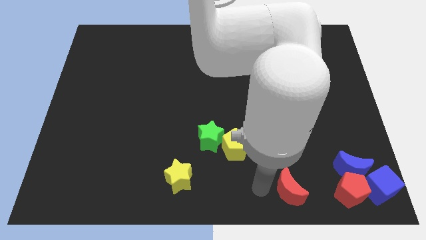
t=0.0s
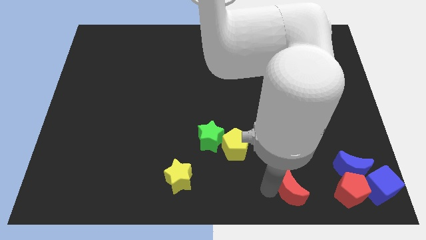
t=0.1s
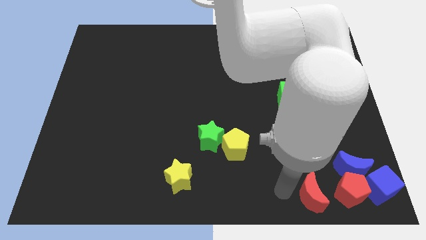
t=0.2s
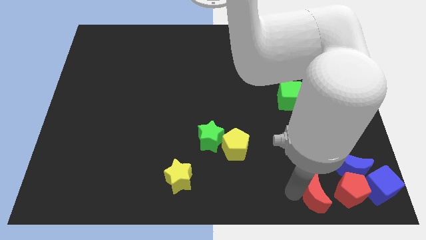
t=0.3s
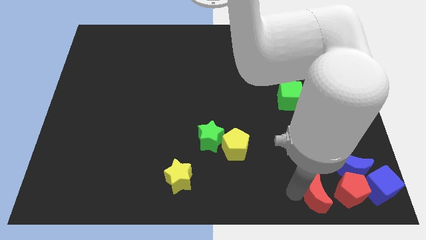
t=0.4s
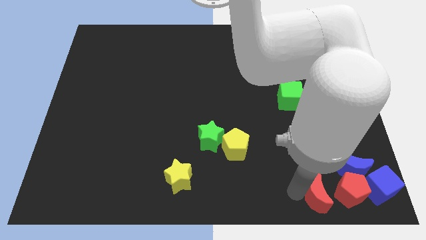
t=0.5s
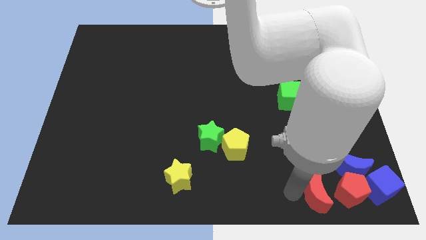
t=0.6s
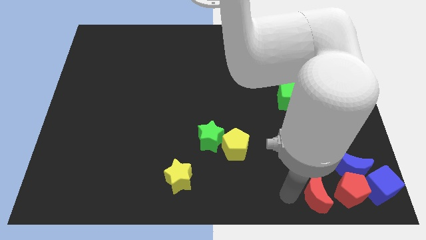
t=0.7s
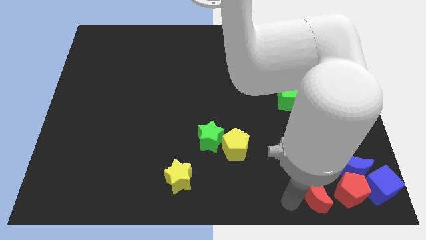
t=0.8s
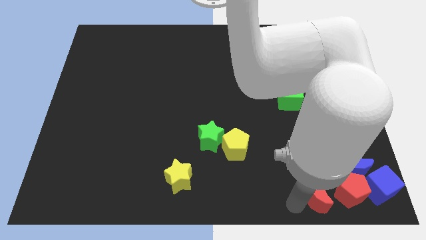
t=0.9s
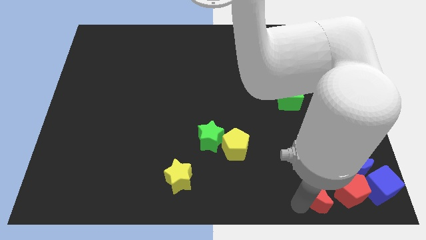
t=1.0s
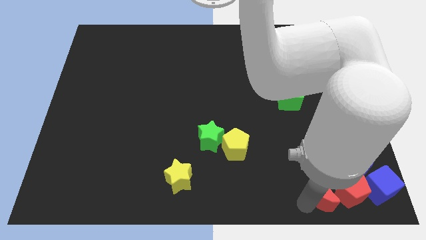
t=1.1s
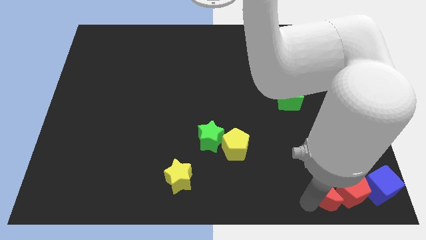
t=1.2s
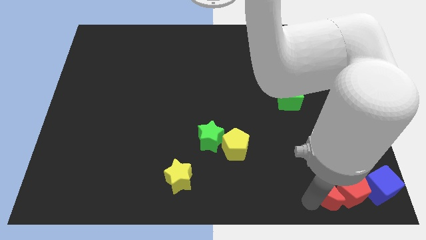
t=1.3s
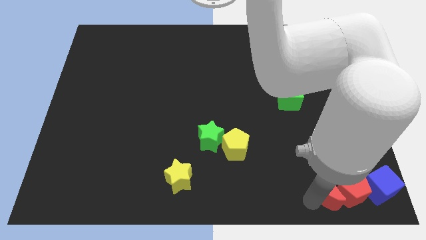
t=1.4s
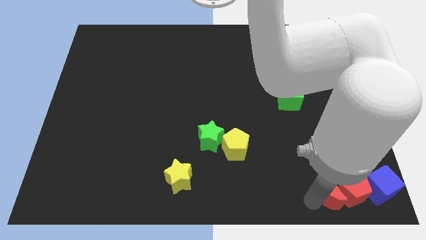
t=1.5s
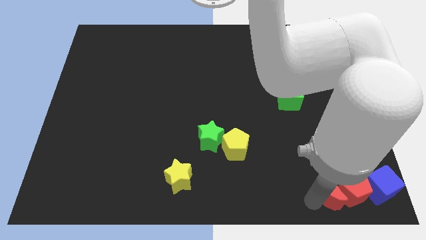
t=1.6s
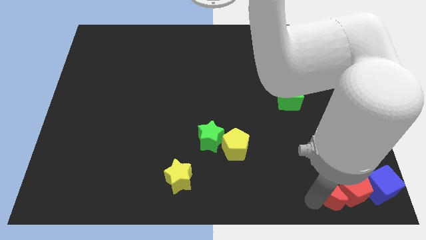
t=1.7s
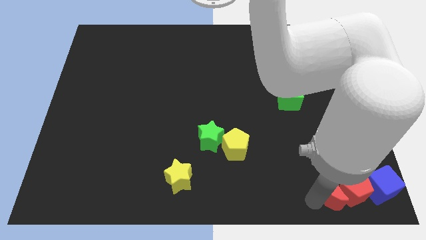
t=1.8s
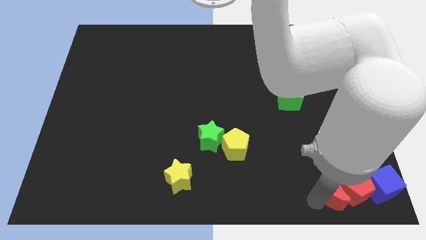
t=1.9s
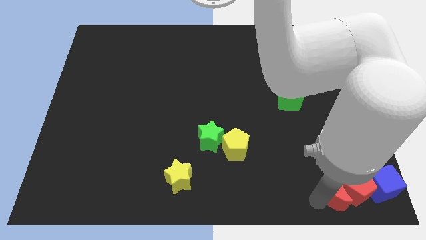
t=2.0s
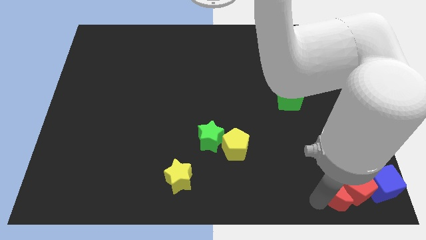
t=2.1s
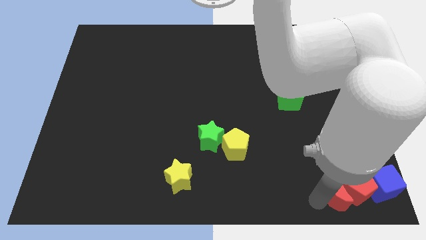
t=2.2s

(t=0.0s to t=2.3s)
push the red moon into the red pentagon

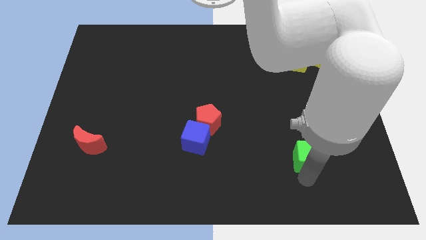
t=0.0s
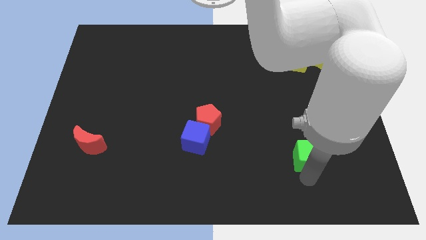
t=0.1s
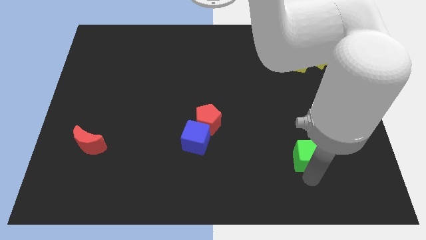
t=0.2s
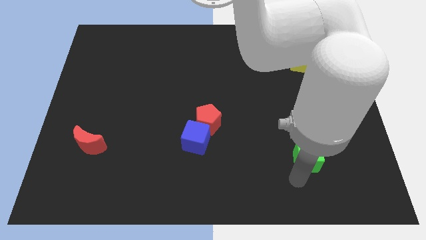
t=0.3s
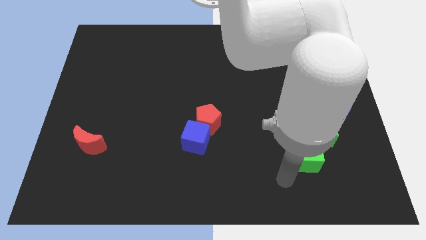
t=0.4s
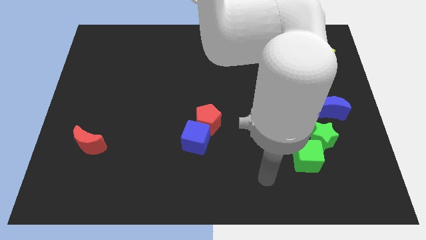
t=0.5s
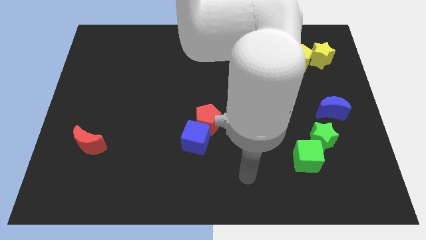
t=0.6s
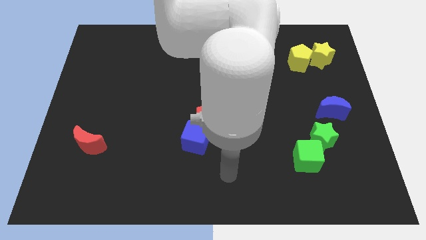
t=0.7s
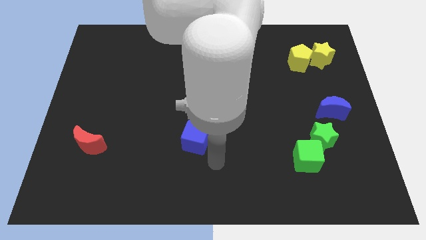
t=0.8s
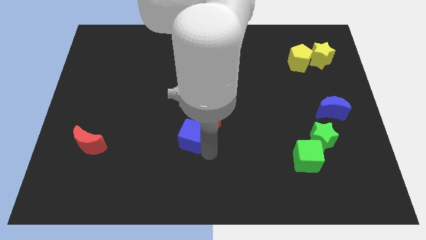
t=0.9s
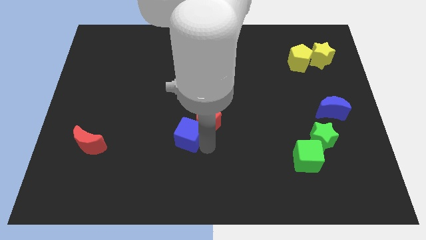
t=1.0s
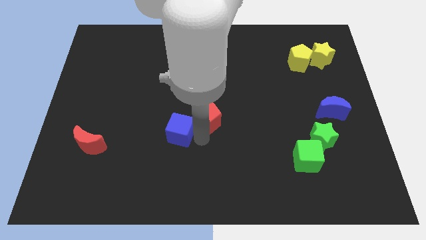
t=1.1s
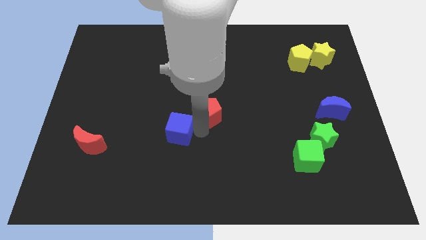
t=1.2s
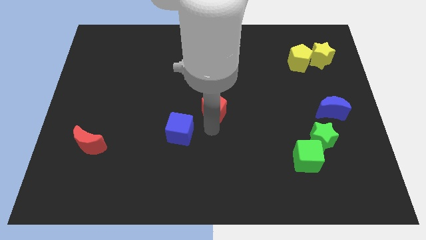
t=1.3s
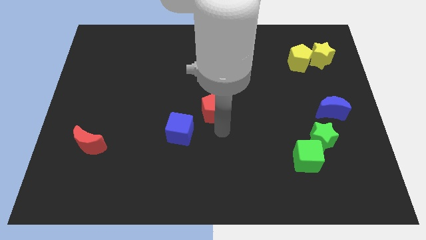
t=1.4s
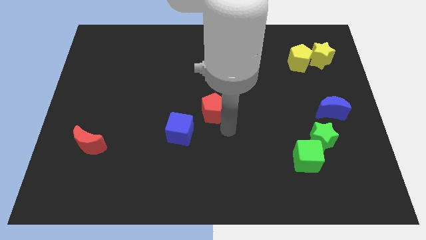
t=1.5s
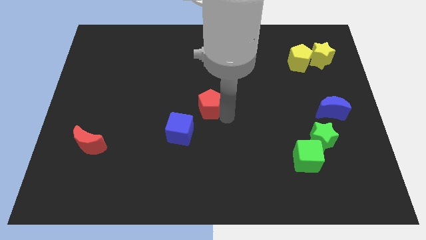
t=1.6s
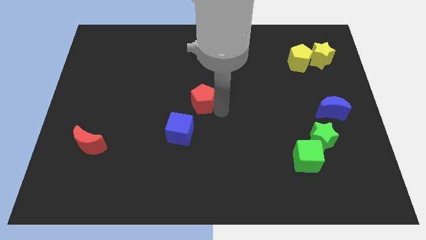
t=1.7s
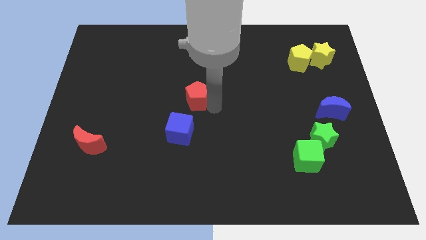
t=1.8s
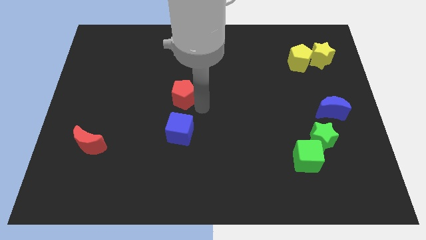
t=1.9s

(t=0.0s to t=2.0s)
separate red pentagon and the blue cube

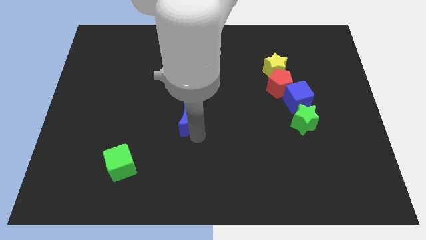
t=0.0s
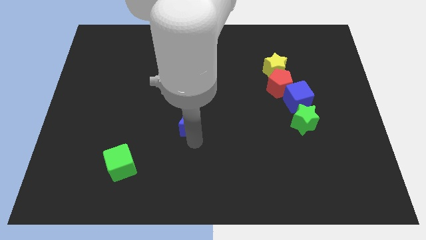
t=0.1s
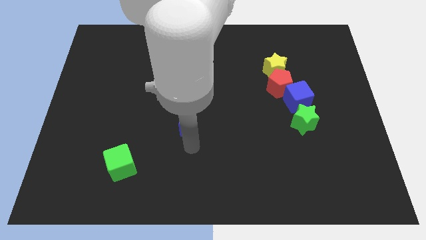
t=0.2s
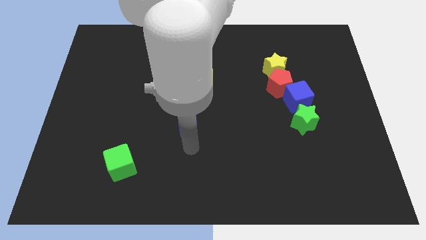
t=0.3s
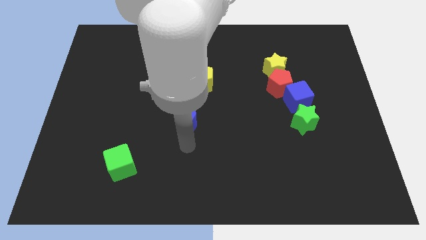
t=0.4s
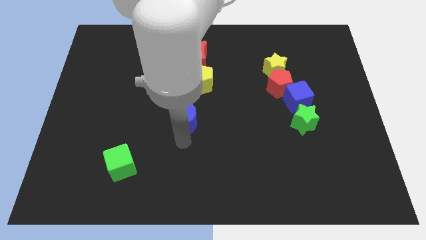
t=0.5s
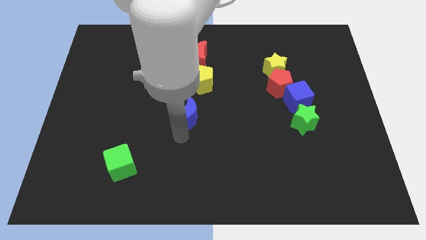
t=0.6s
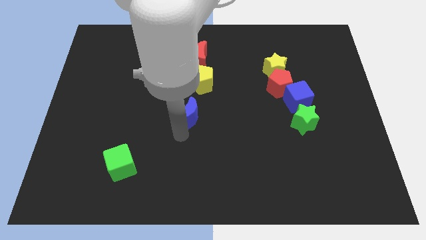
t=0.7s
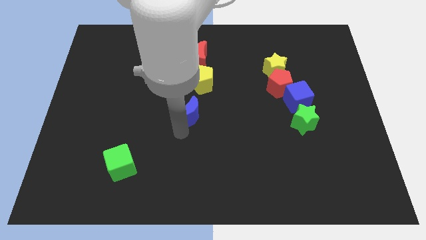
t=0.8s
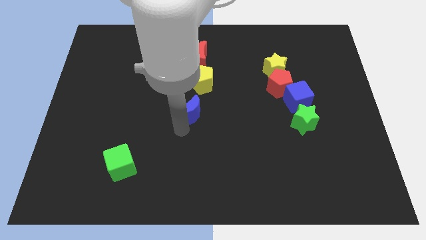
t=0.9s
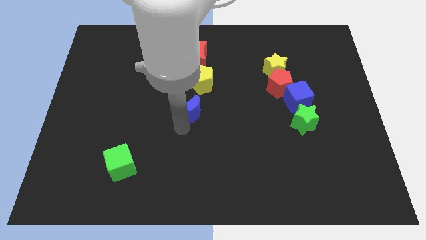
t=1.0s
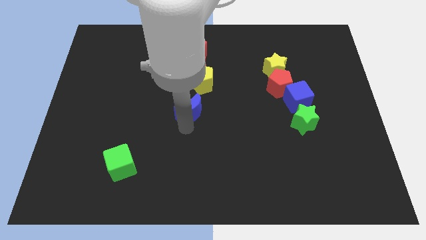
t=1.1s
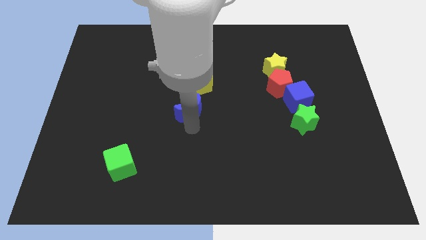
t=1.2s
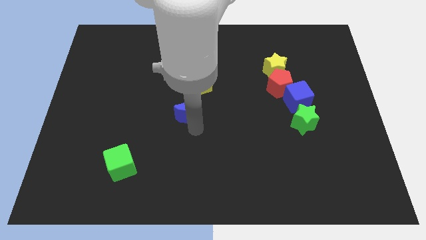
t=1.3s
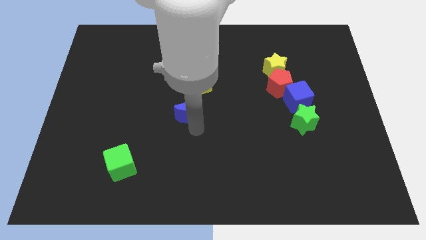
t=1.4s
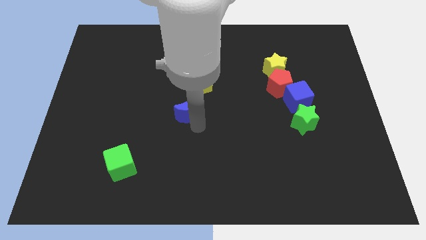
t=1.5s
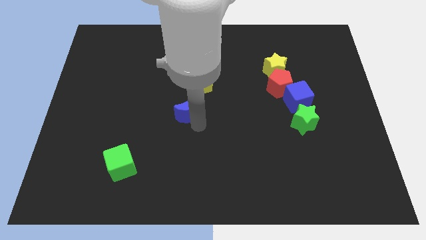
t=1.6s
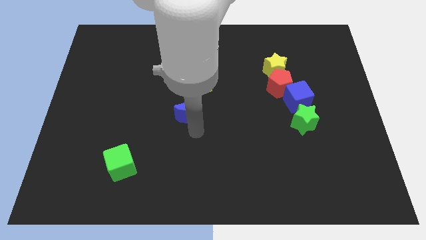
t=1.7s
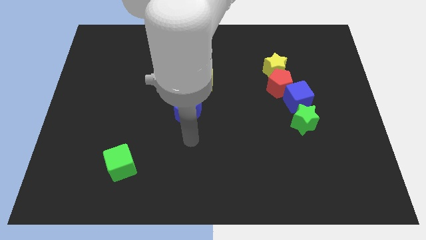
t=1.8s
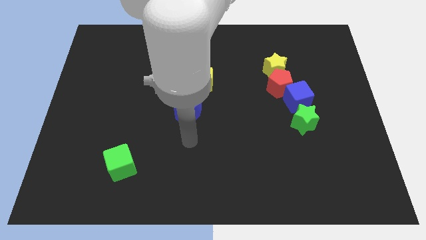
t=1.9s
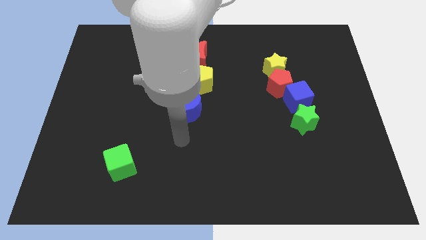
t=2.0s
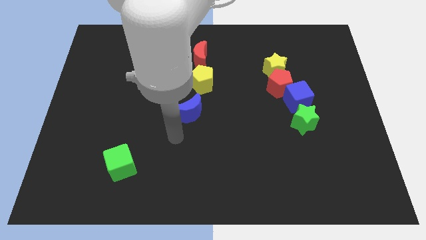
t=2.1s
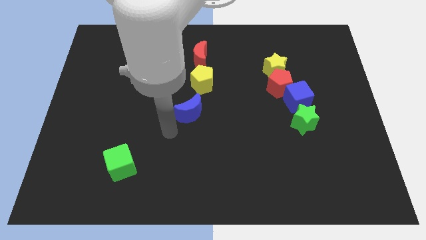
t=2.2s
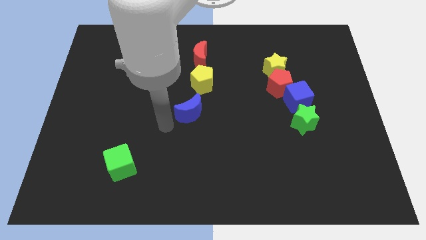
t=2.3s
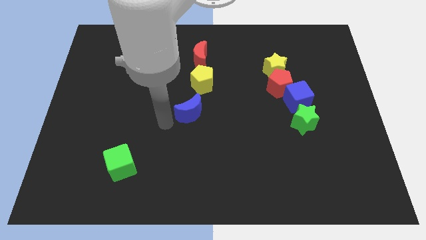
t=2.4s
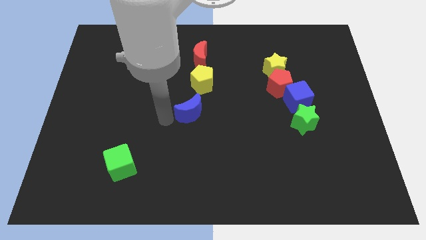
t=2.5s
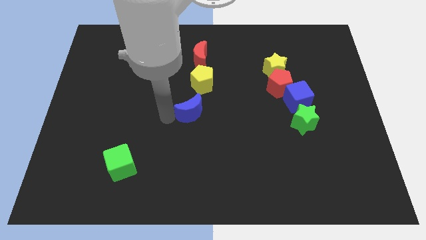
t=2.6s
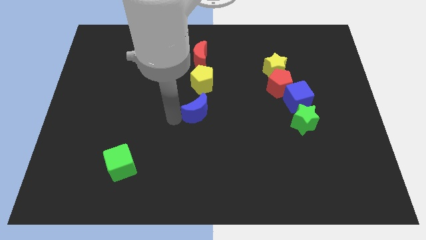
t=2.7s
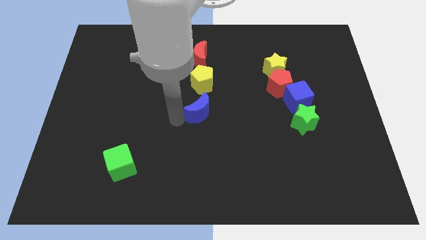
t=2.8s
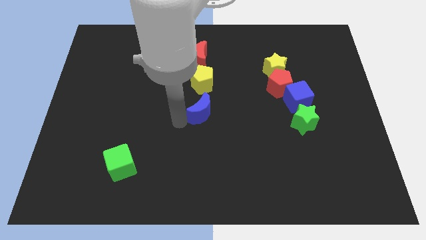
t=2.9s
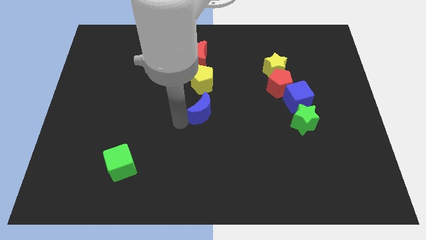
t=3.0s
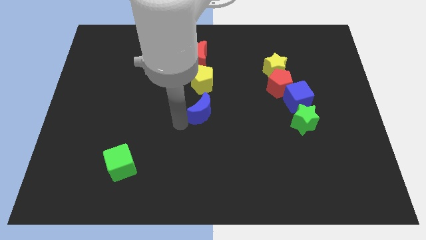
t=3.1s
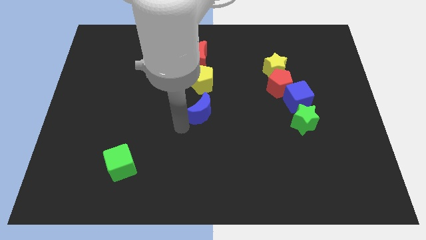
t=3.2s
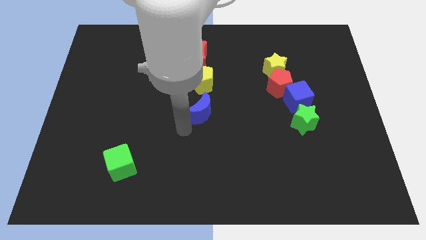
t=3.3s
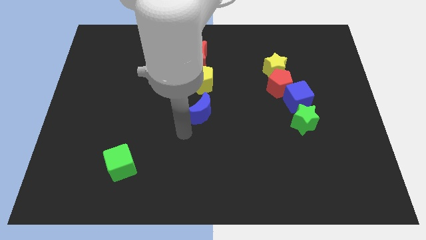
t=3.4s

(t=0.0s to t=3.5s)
place the blue moon down to the yellow pentagon

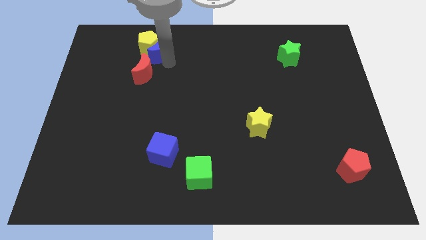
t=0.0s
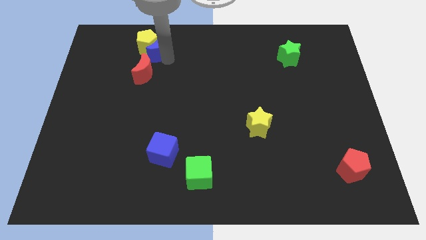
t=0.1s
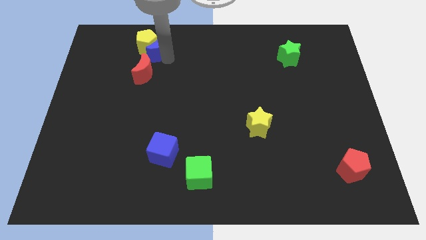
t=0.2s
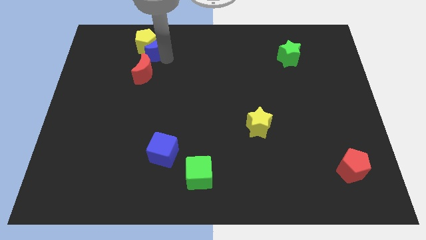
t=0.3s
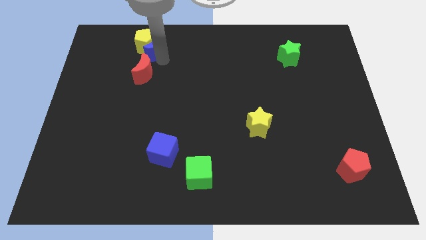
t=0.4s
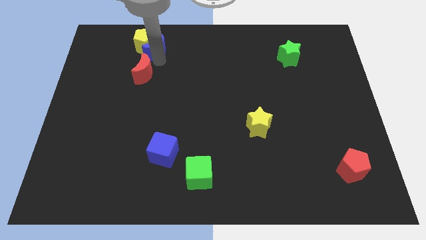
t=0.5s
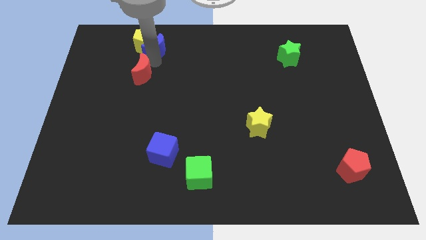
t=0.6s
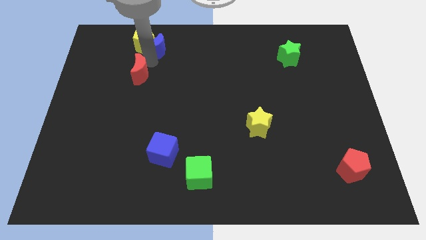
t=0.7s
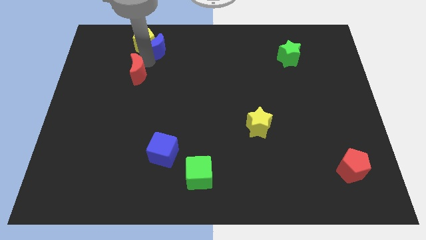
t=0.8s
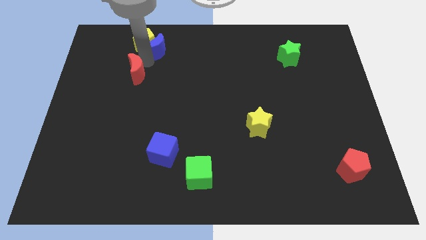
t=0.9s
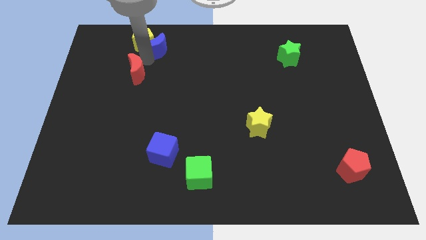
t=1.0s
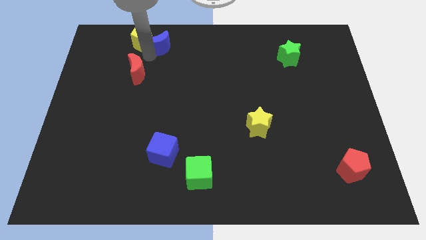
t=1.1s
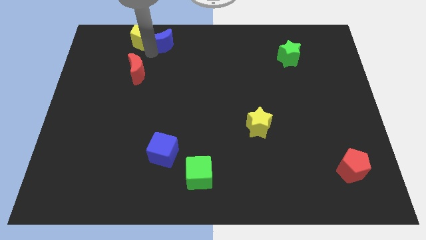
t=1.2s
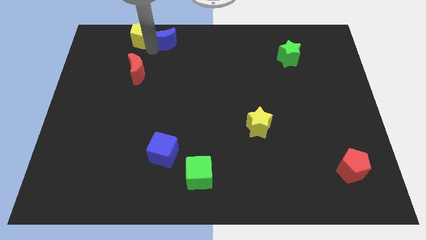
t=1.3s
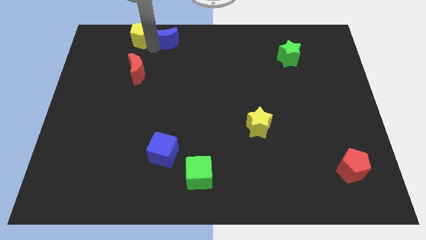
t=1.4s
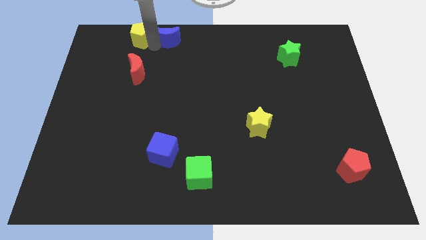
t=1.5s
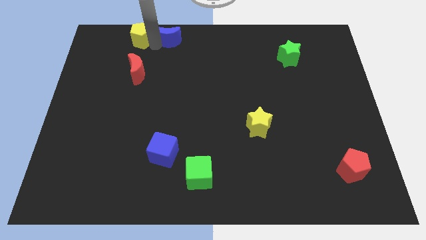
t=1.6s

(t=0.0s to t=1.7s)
place the blue crescent right side of yellow pentagon
